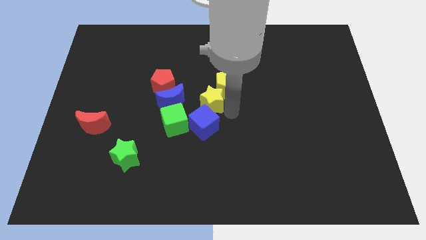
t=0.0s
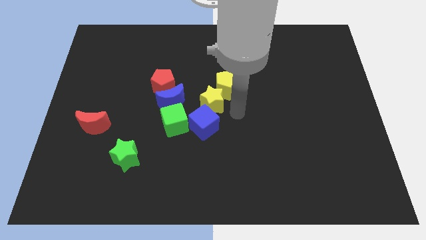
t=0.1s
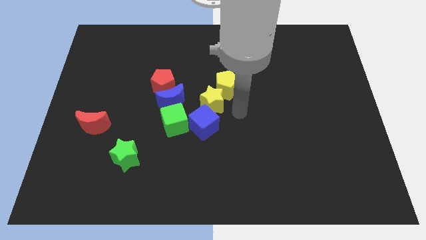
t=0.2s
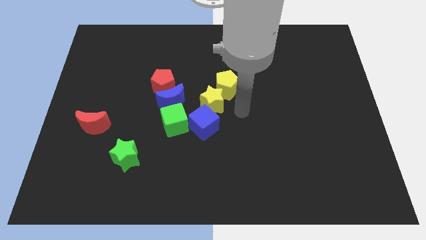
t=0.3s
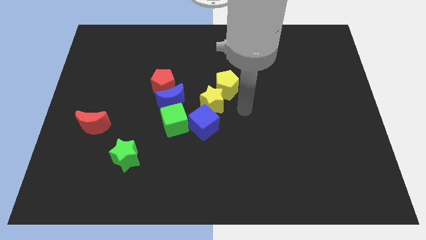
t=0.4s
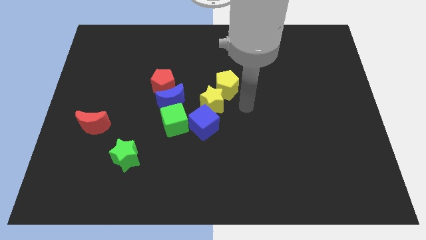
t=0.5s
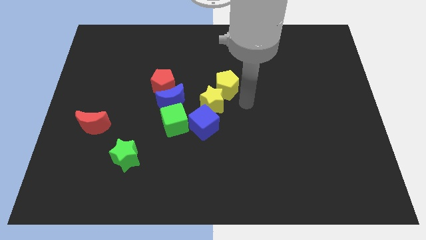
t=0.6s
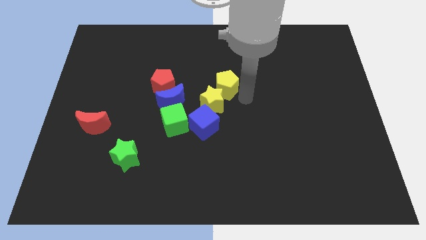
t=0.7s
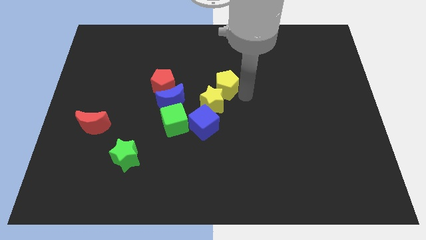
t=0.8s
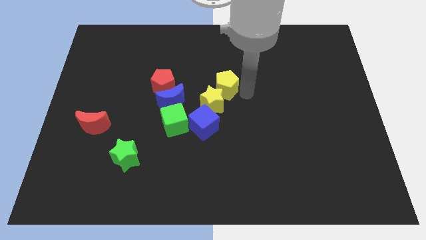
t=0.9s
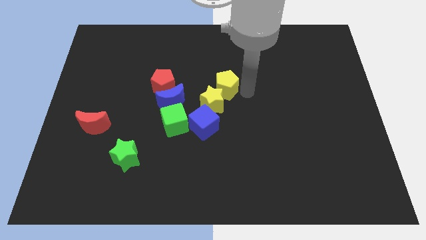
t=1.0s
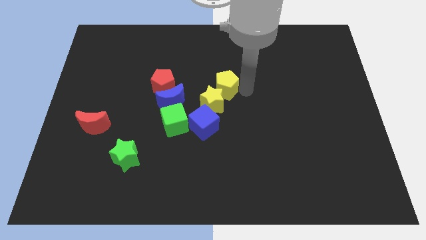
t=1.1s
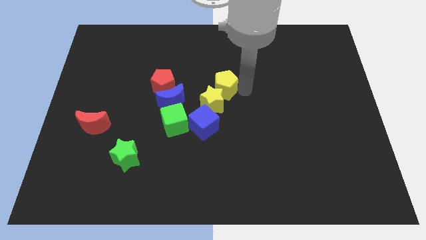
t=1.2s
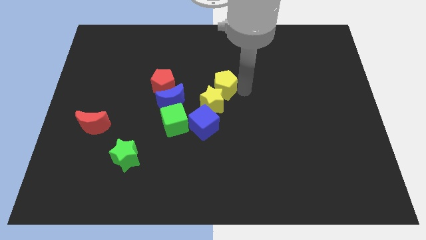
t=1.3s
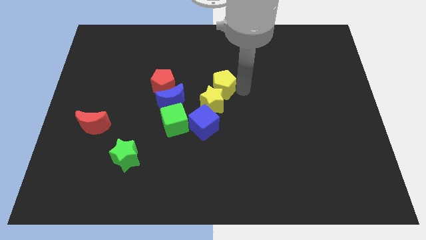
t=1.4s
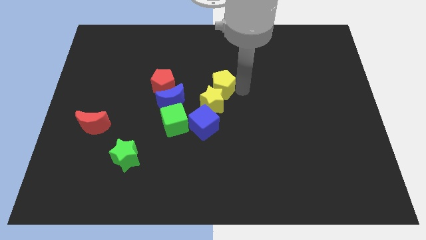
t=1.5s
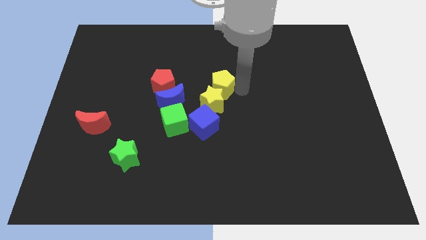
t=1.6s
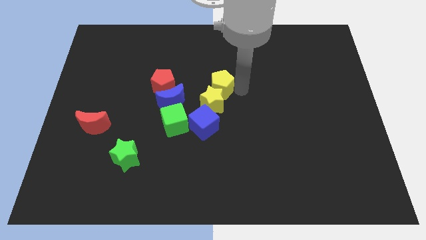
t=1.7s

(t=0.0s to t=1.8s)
adjust the yellow blocks

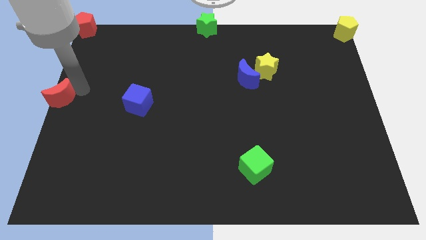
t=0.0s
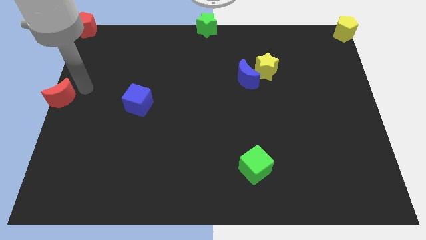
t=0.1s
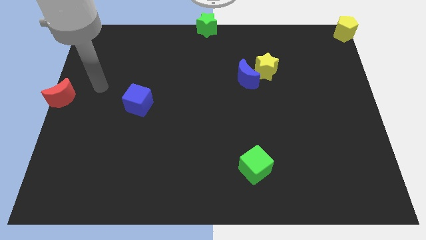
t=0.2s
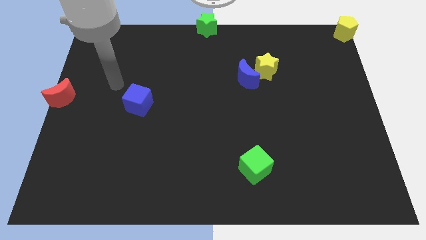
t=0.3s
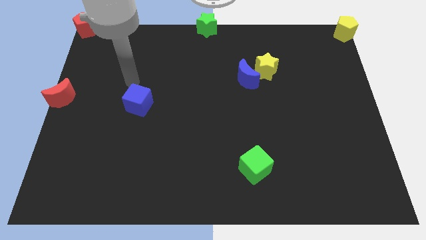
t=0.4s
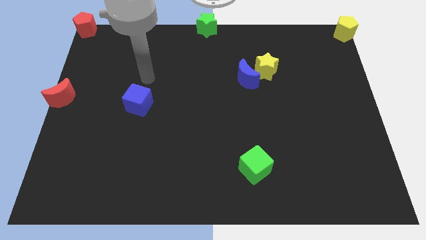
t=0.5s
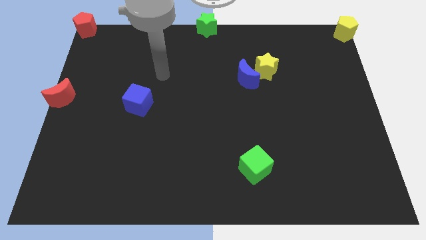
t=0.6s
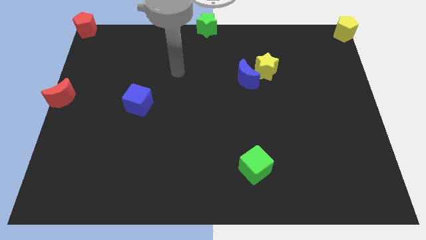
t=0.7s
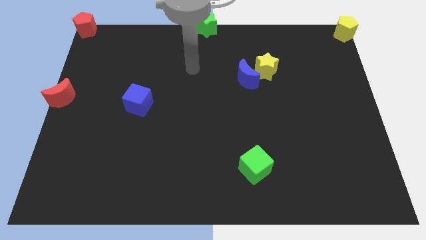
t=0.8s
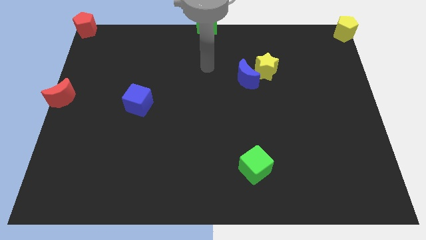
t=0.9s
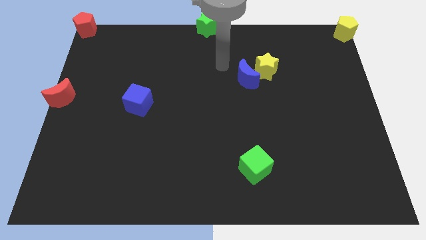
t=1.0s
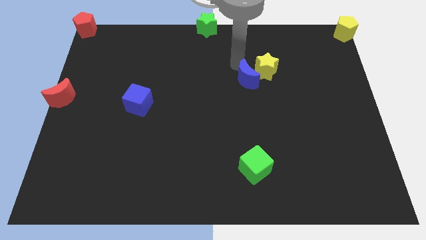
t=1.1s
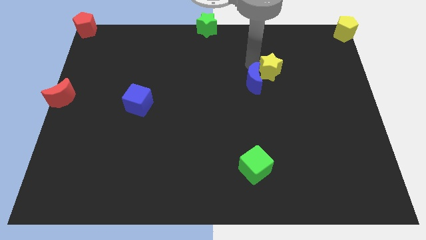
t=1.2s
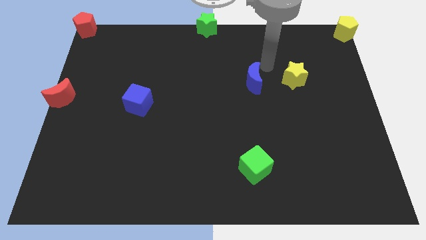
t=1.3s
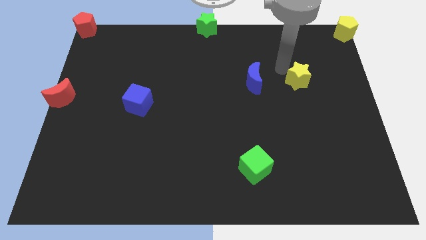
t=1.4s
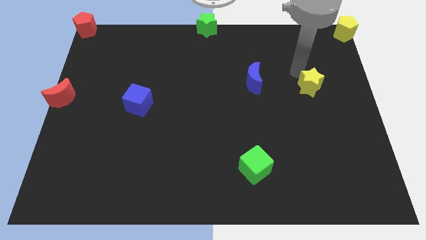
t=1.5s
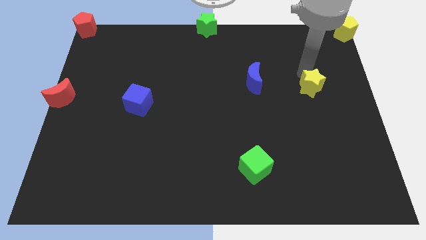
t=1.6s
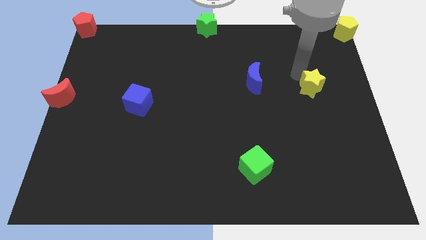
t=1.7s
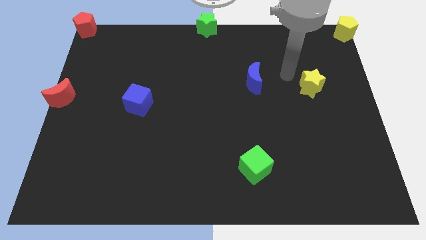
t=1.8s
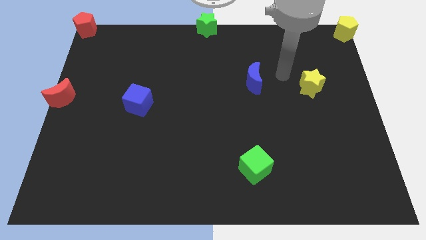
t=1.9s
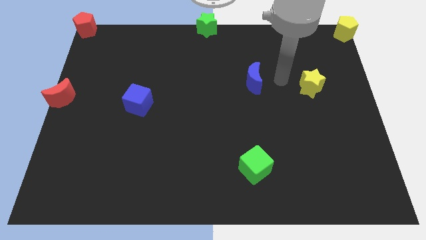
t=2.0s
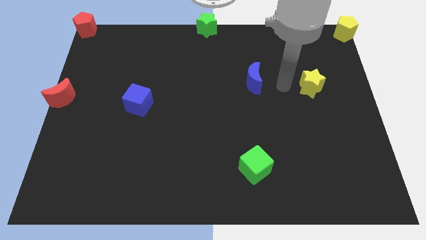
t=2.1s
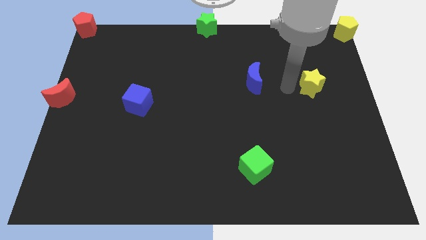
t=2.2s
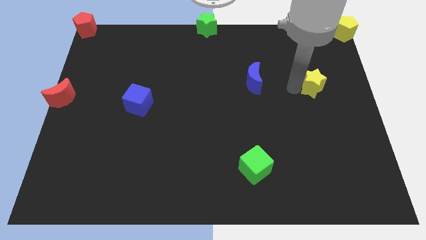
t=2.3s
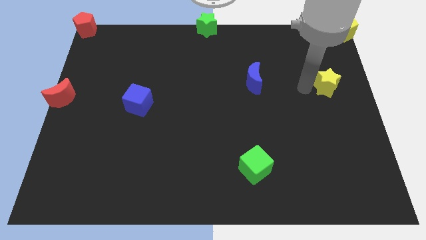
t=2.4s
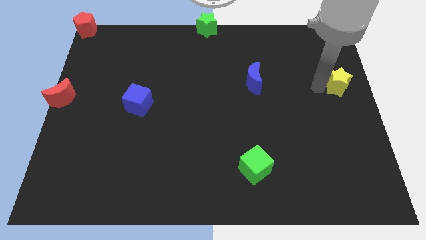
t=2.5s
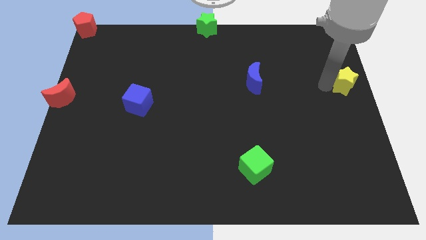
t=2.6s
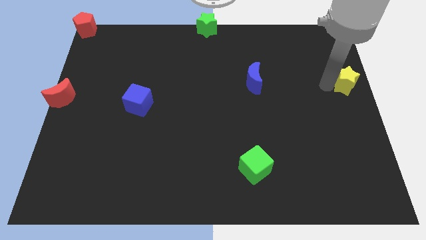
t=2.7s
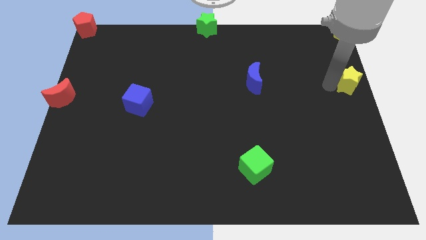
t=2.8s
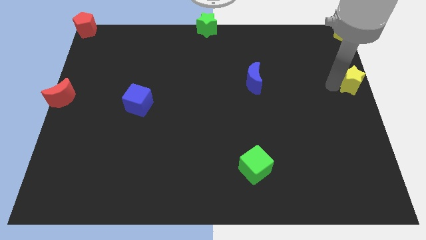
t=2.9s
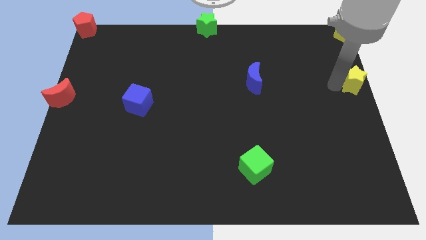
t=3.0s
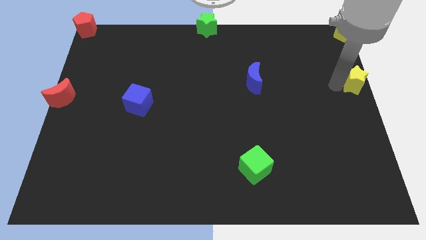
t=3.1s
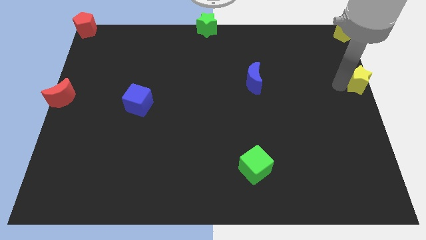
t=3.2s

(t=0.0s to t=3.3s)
push the yellow star towards the right side of the board

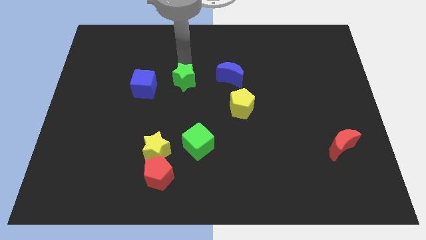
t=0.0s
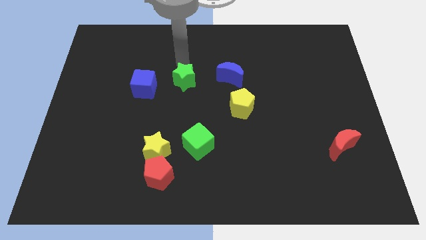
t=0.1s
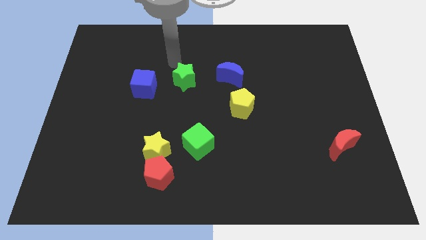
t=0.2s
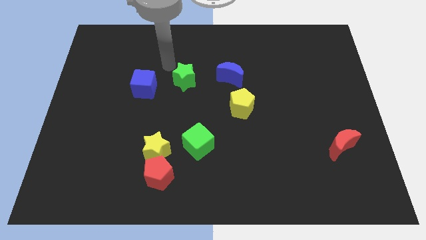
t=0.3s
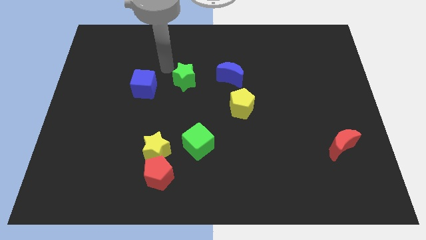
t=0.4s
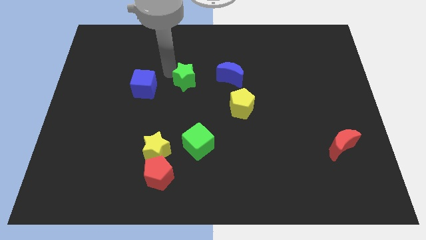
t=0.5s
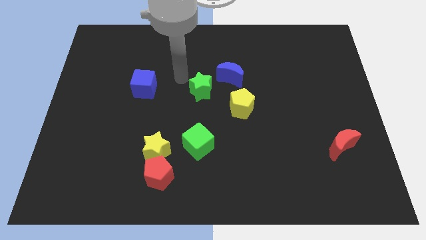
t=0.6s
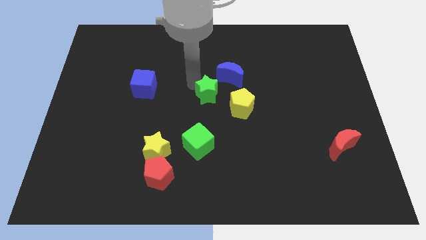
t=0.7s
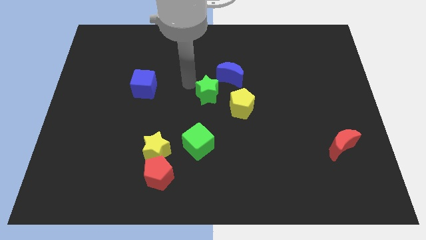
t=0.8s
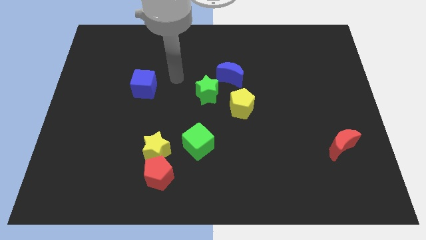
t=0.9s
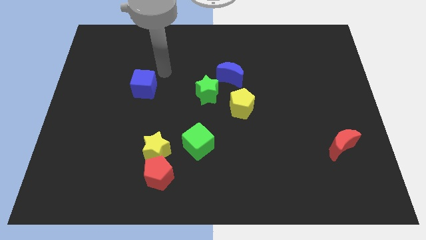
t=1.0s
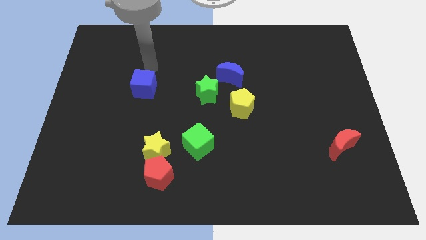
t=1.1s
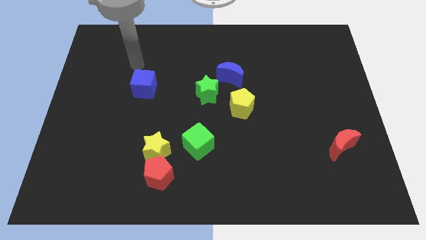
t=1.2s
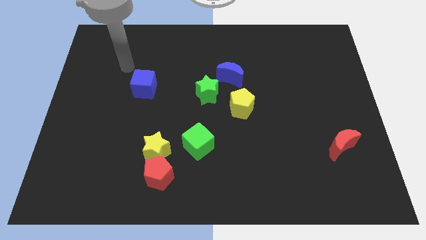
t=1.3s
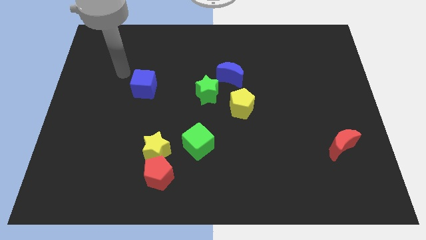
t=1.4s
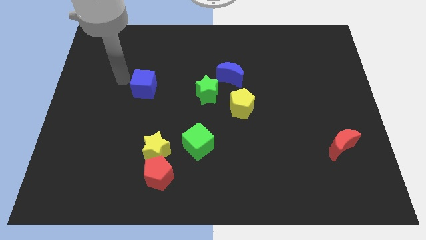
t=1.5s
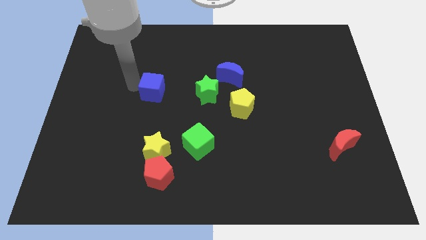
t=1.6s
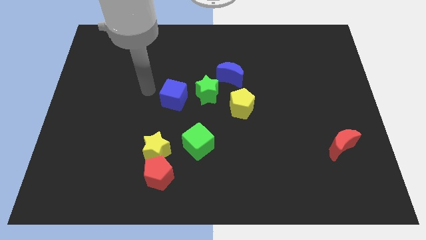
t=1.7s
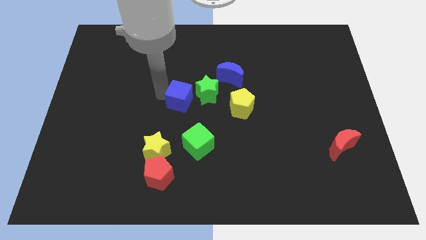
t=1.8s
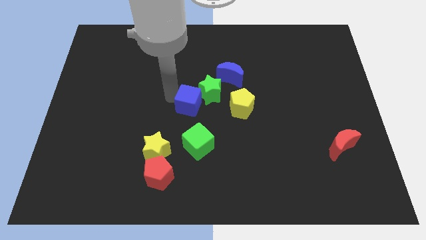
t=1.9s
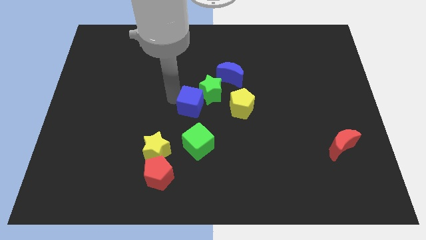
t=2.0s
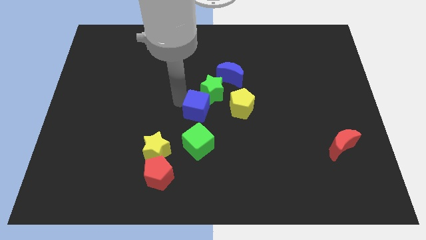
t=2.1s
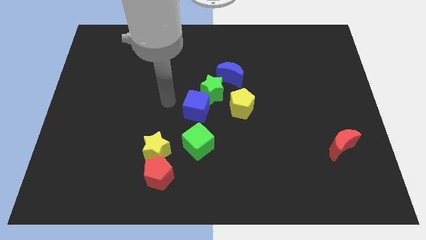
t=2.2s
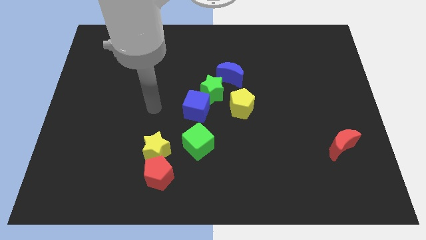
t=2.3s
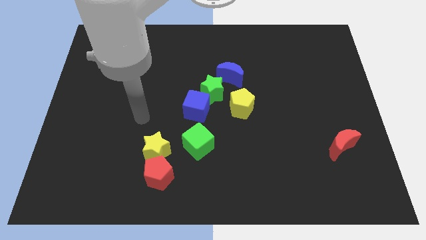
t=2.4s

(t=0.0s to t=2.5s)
move the green star and the blue cube to the left of the yellow pentagon

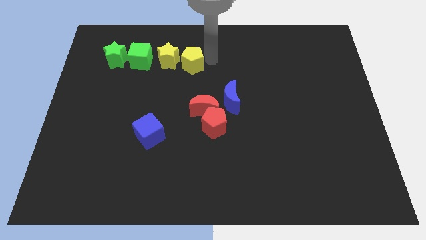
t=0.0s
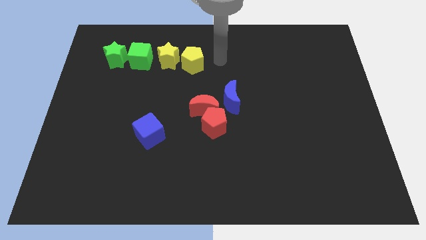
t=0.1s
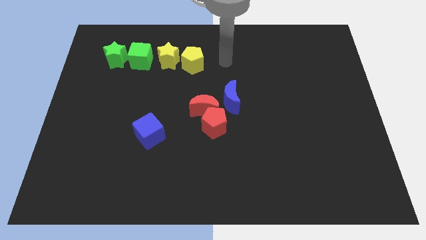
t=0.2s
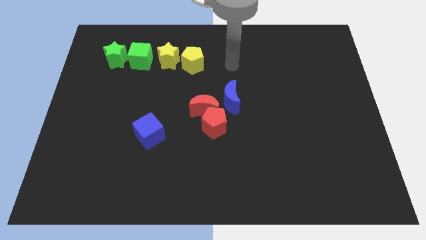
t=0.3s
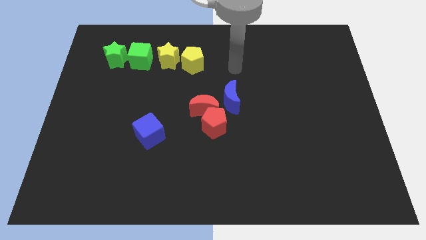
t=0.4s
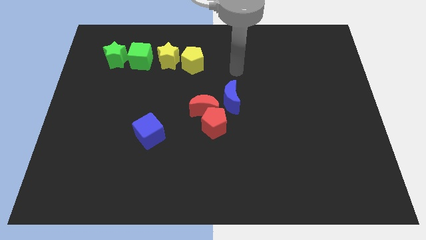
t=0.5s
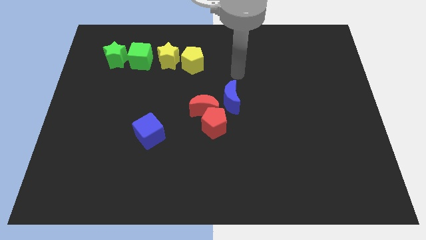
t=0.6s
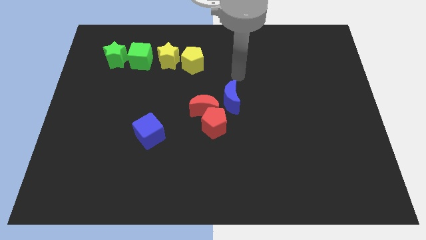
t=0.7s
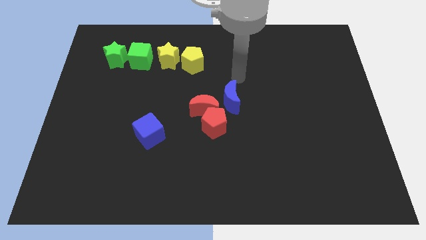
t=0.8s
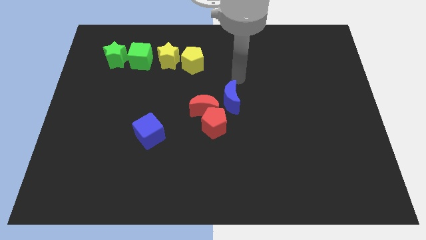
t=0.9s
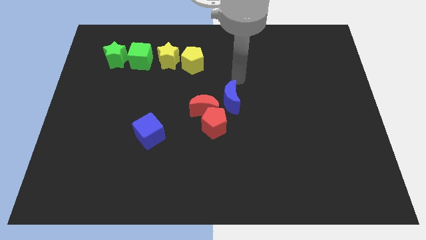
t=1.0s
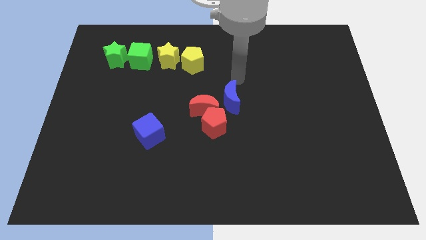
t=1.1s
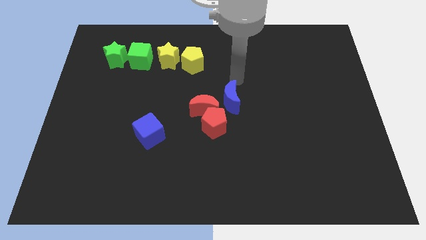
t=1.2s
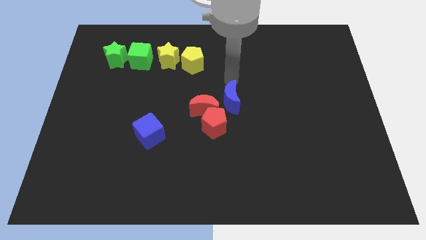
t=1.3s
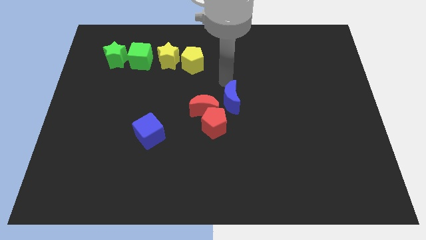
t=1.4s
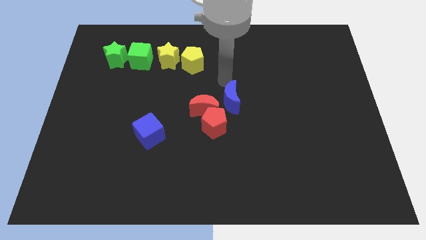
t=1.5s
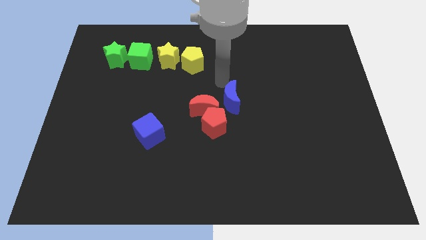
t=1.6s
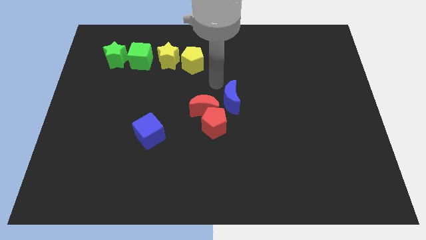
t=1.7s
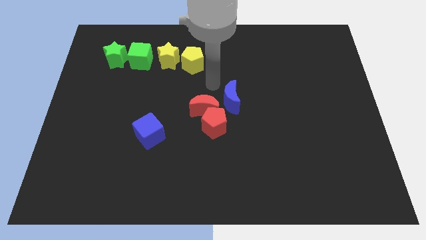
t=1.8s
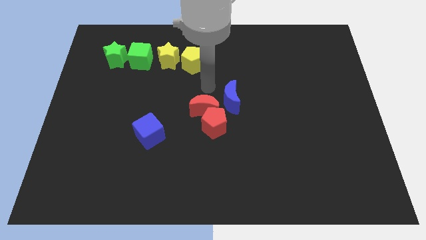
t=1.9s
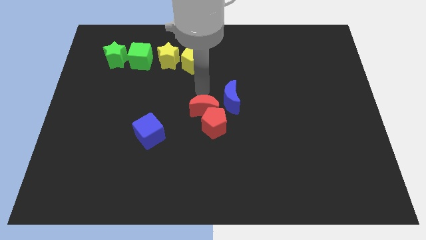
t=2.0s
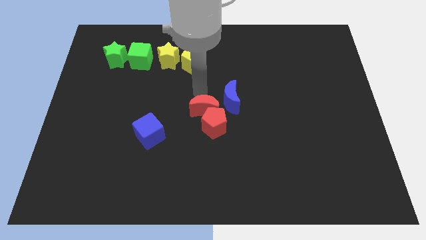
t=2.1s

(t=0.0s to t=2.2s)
point your arm at the top of red moon
